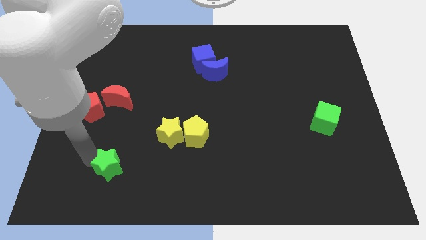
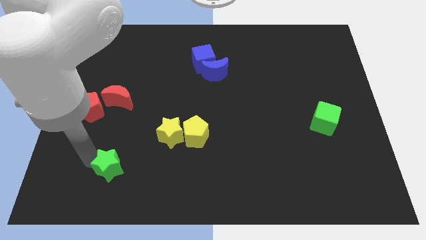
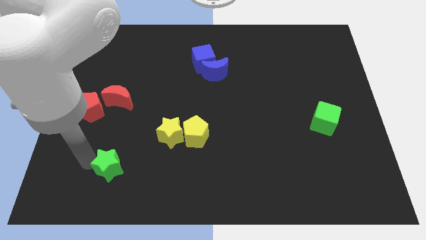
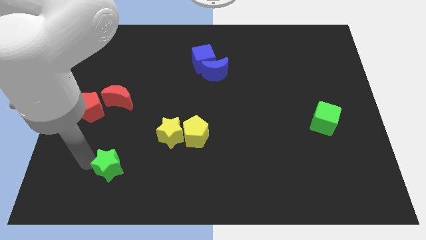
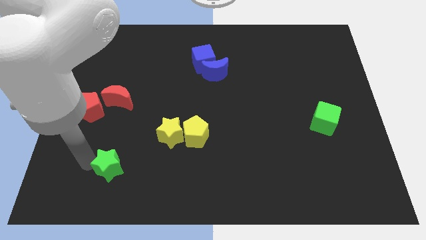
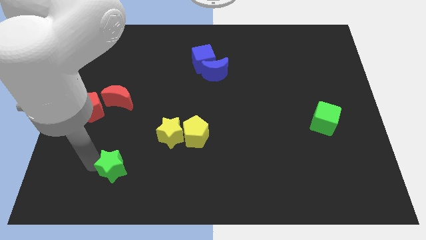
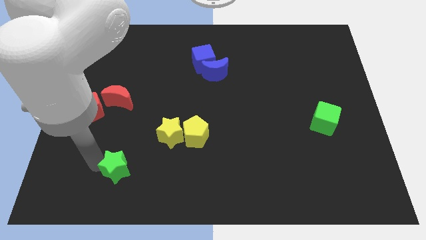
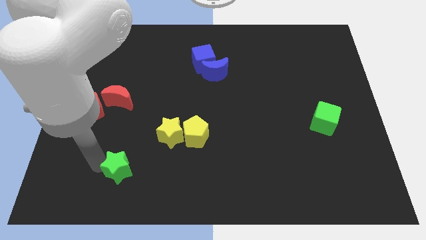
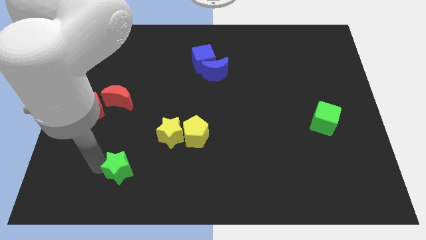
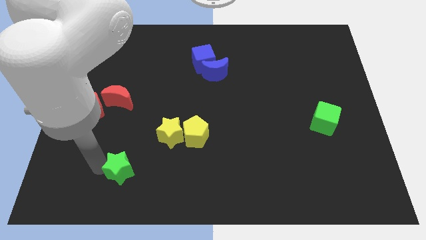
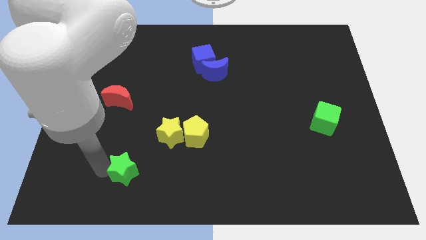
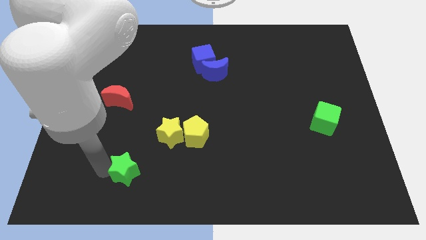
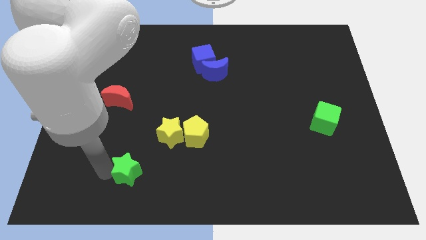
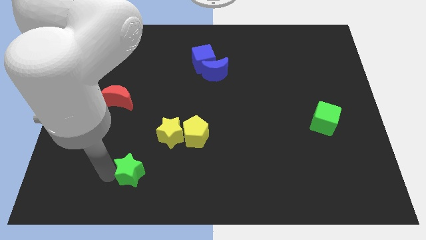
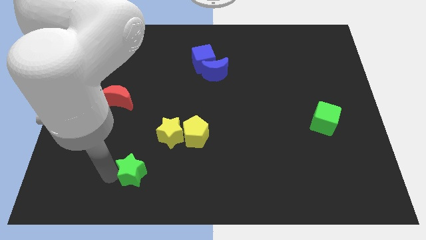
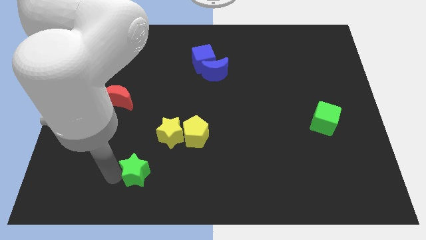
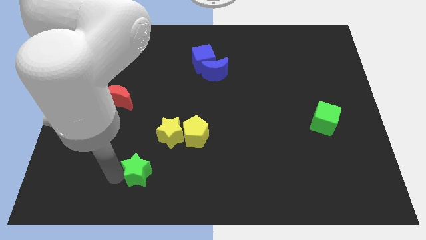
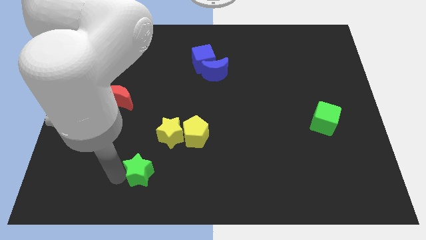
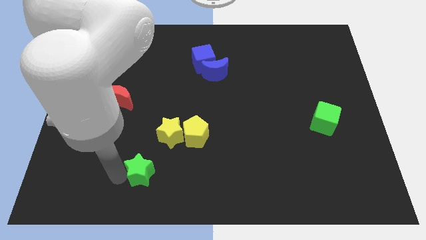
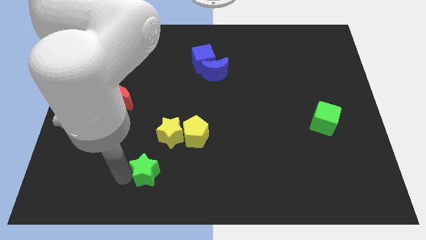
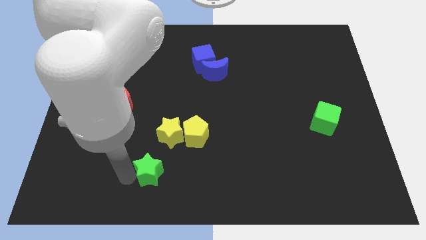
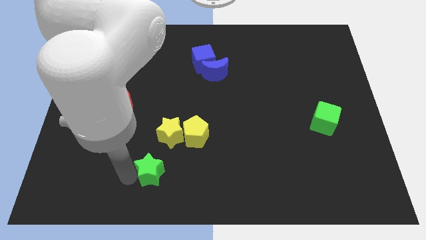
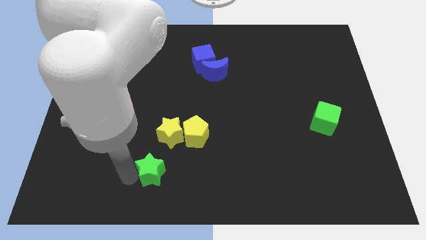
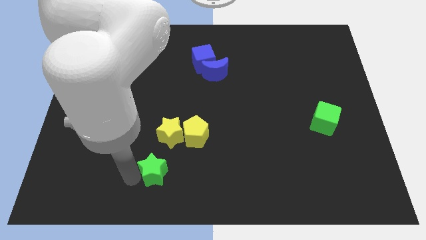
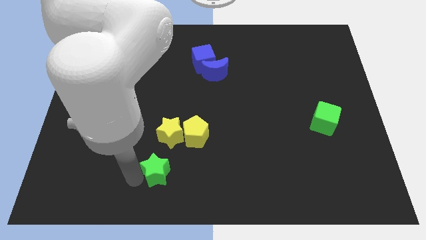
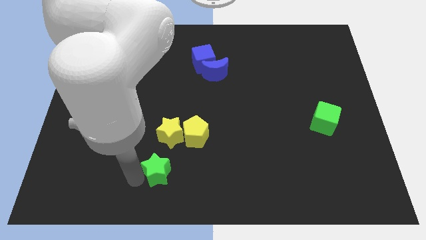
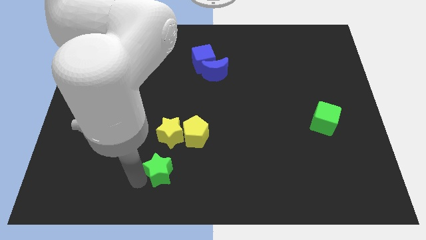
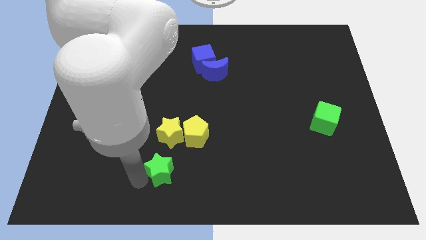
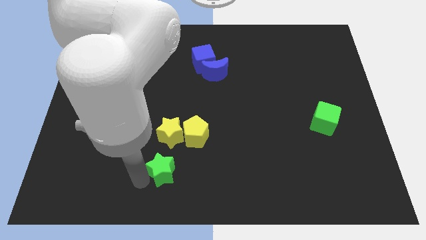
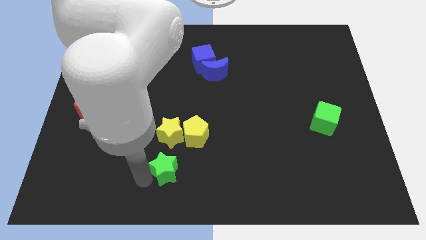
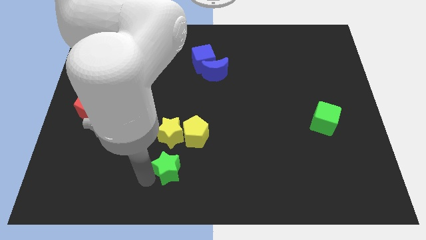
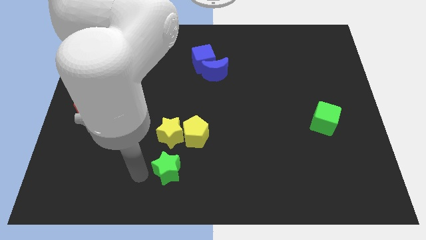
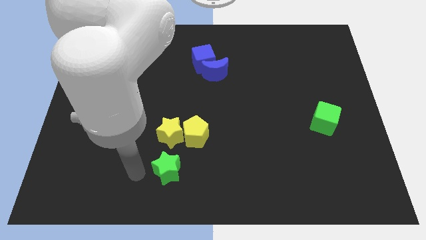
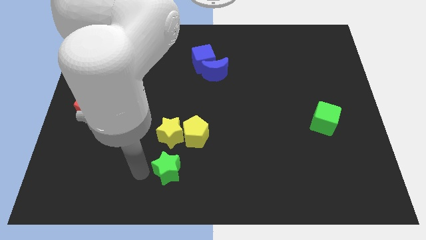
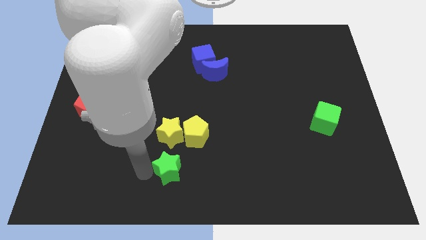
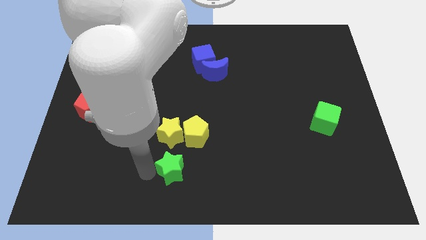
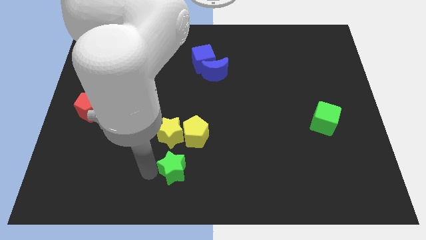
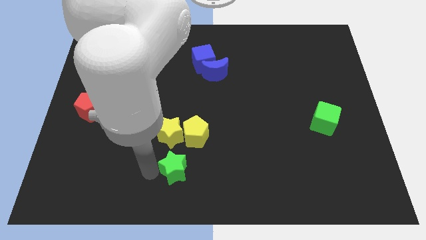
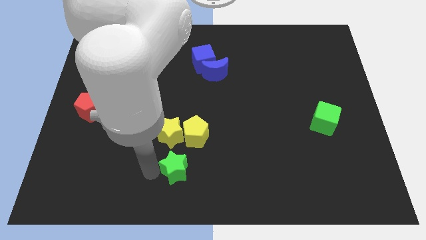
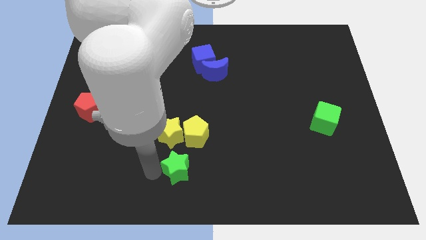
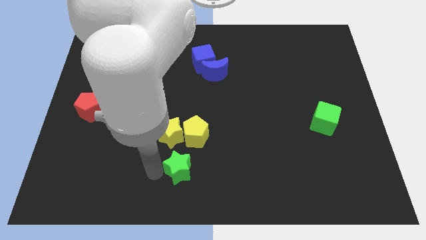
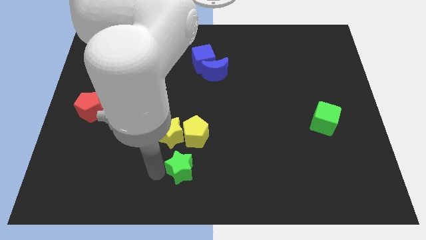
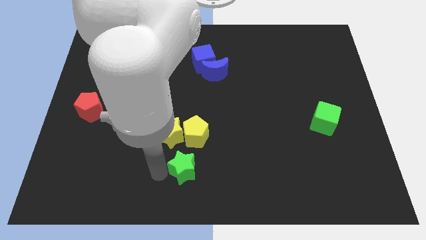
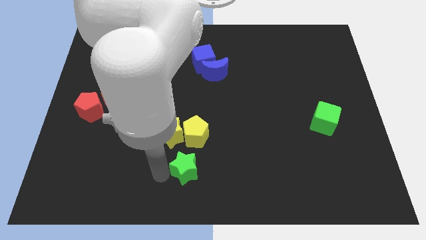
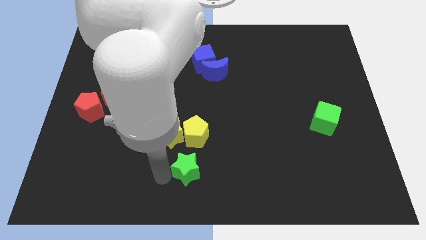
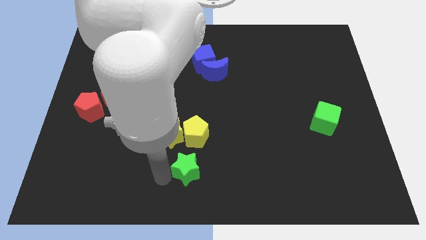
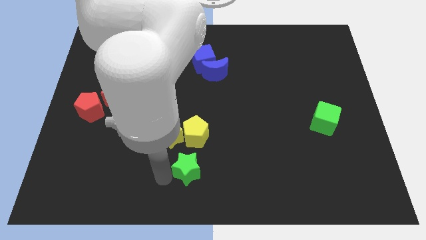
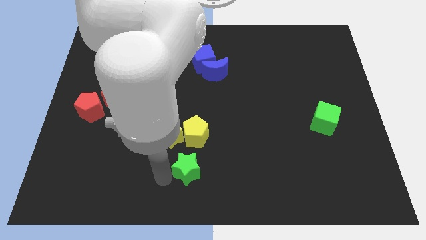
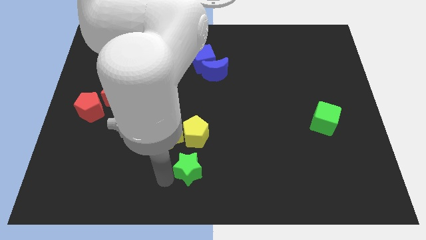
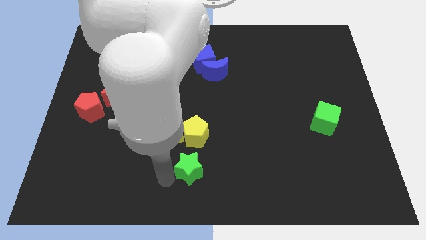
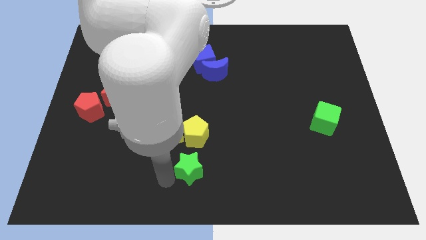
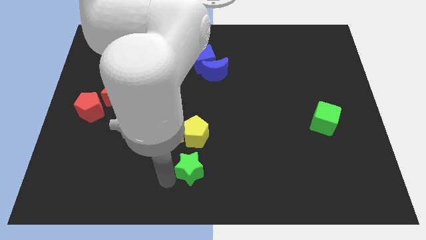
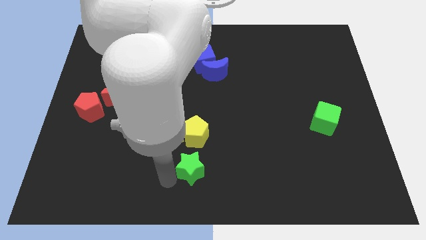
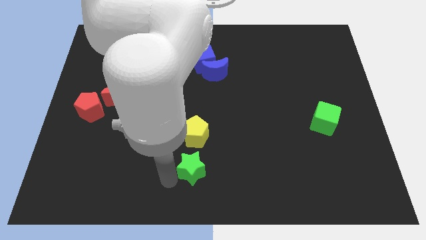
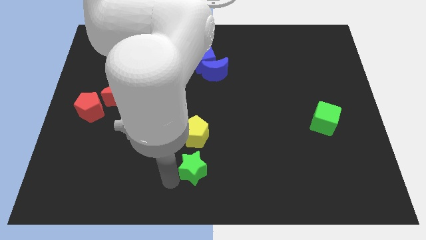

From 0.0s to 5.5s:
push the green star to the bottom side of the yellow pentagon

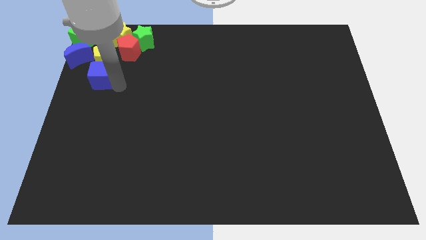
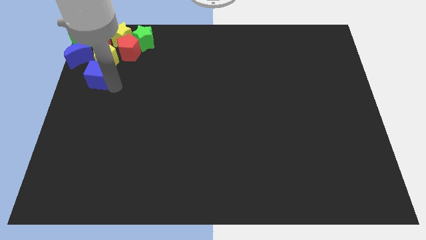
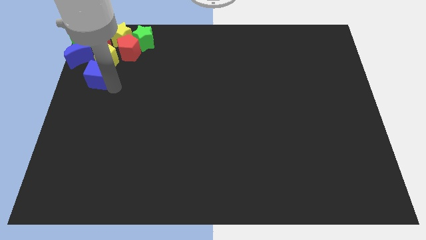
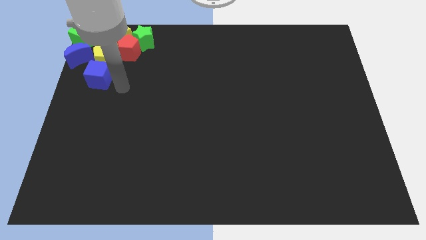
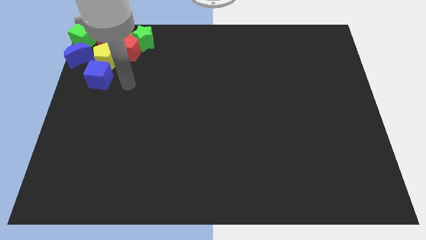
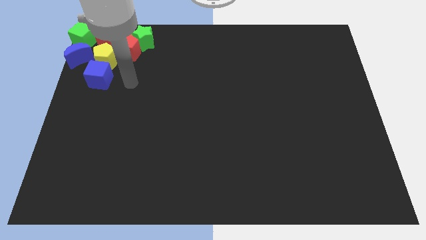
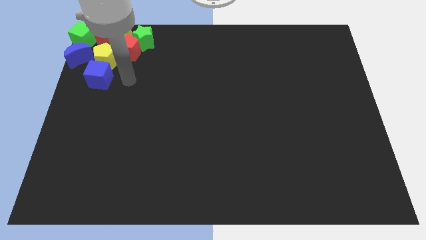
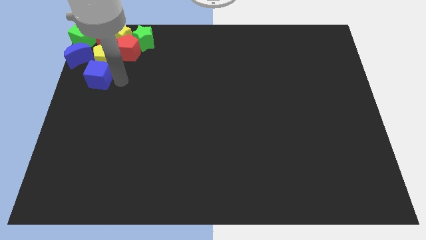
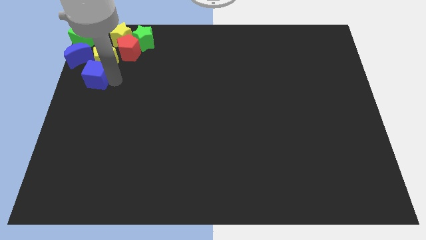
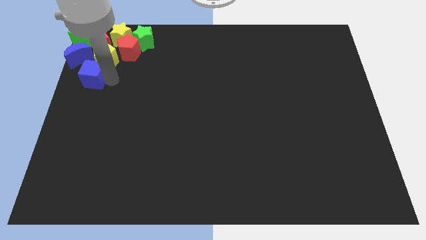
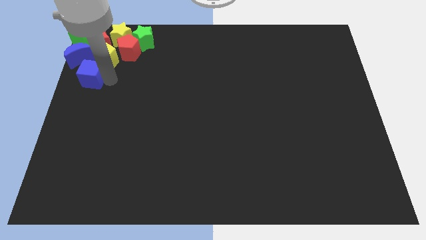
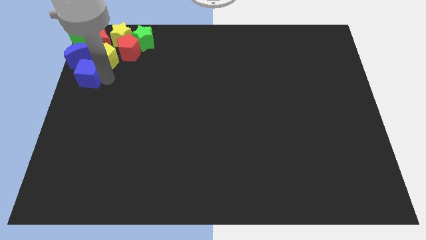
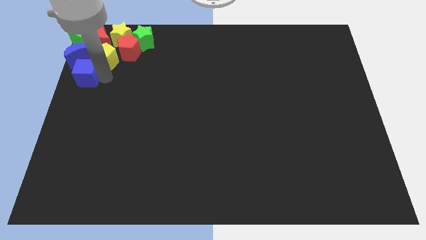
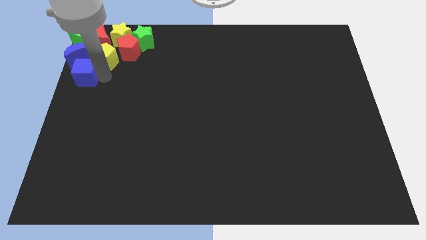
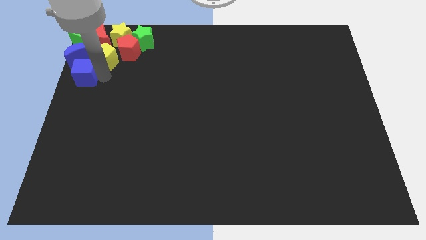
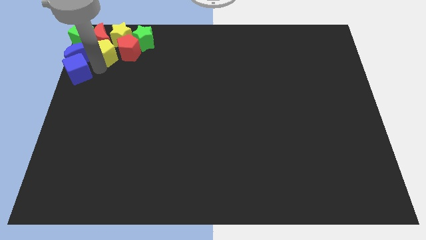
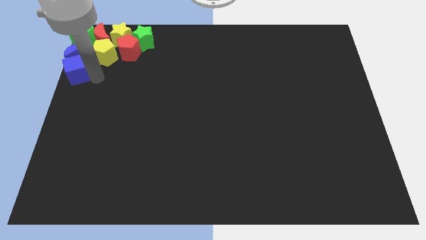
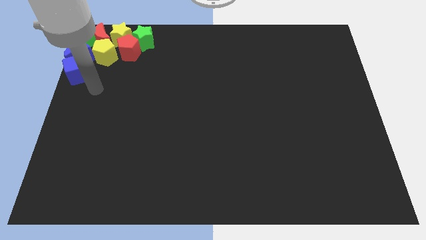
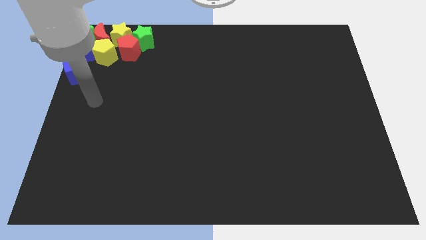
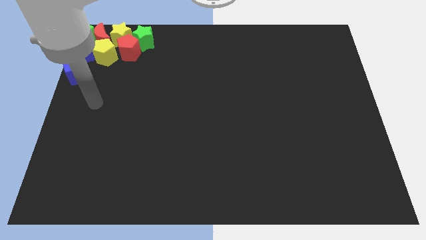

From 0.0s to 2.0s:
push the blue cube vertically below the blue moon

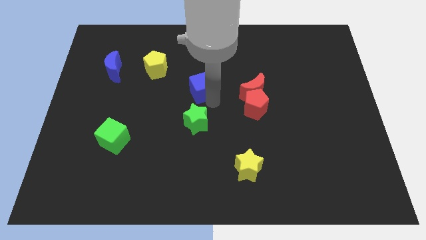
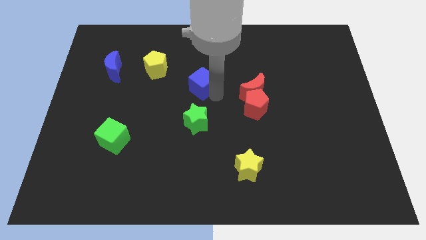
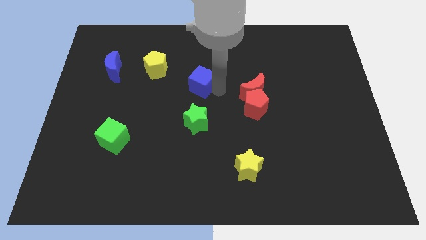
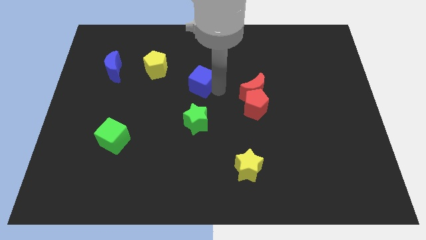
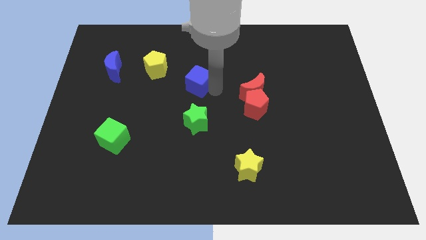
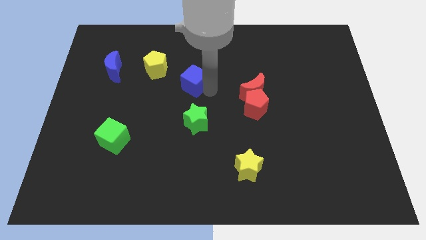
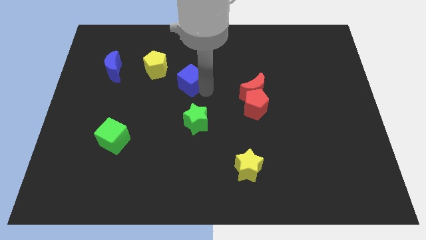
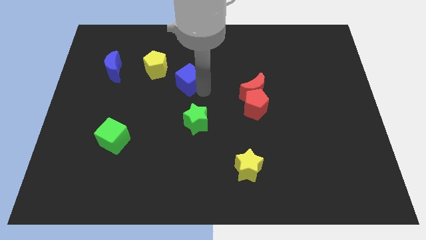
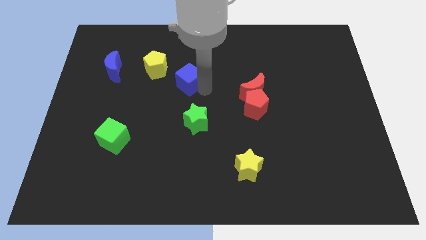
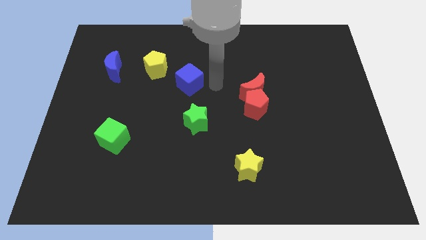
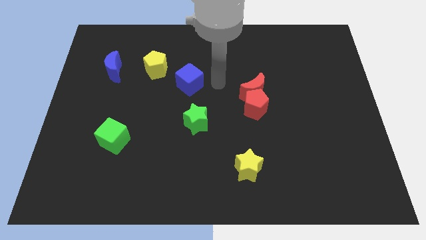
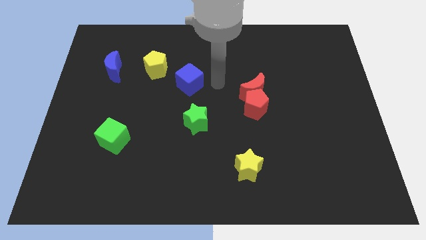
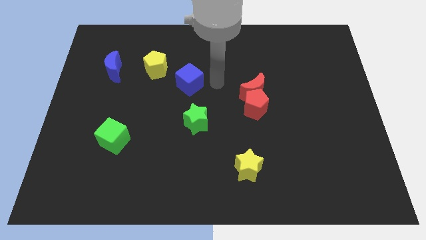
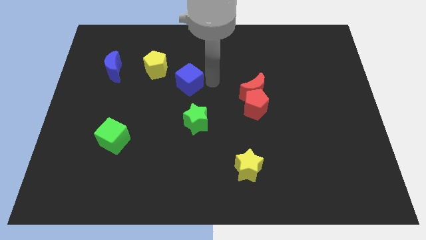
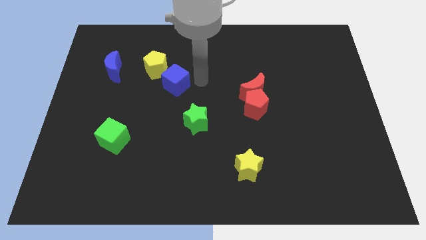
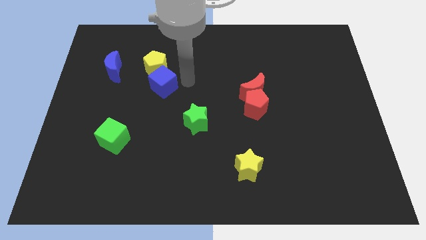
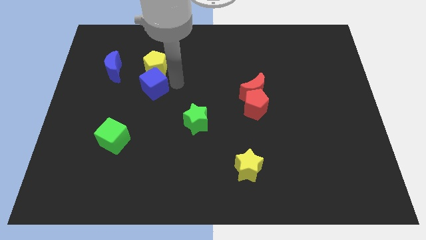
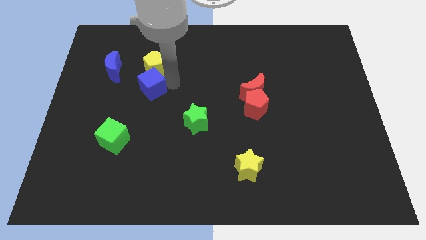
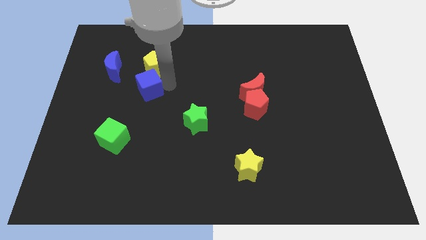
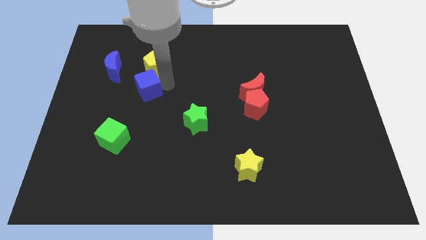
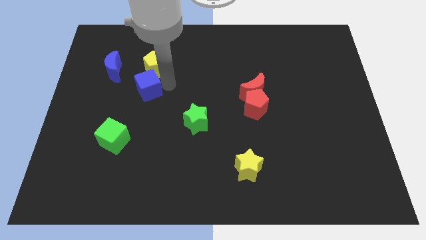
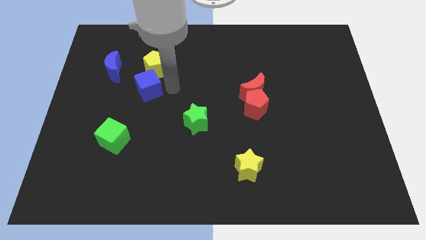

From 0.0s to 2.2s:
move the blue cube to the bottom of the yellow pentagon
